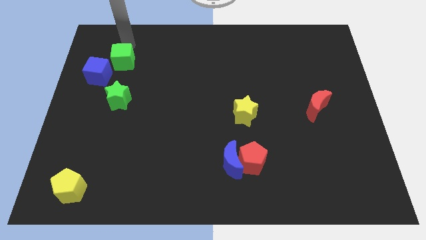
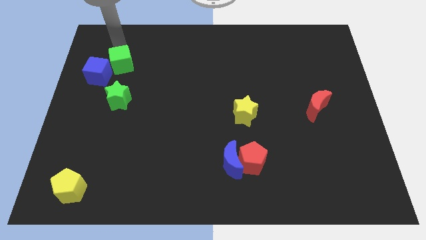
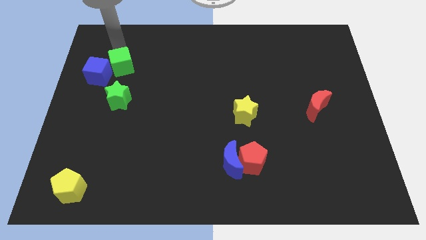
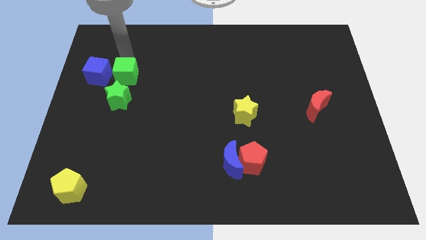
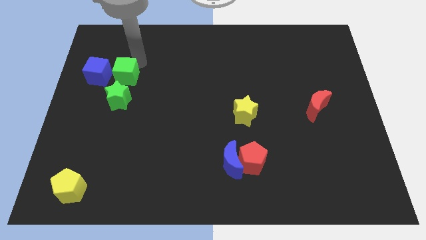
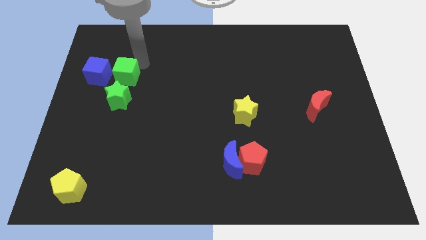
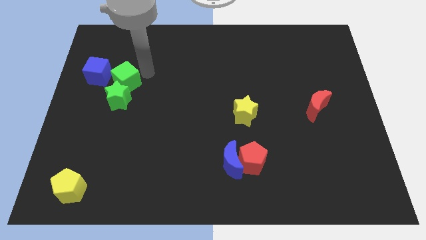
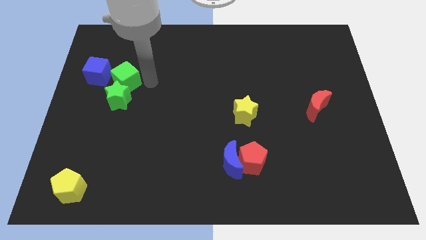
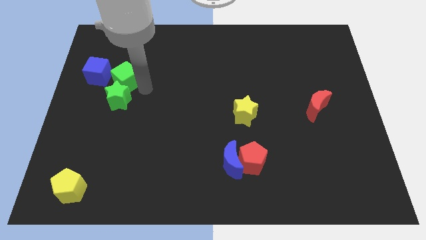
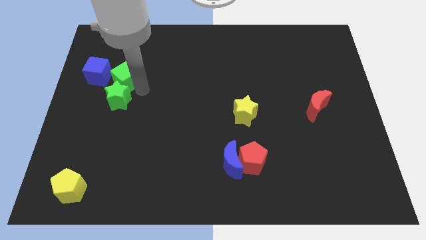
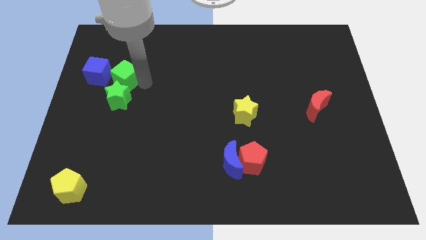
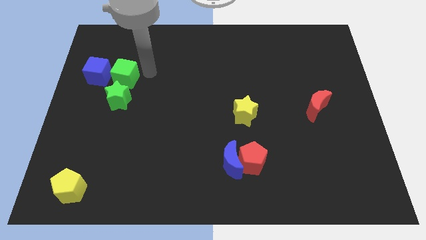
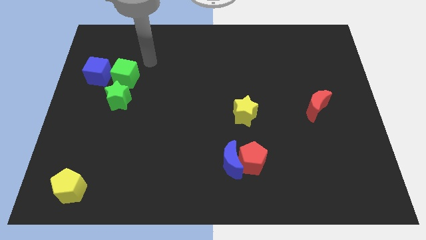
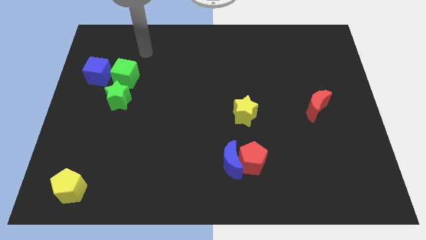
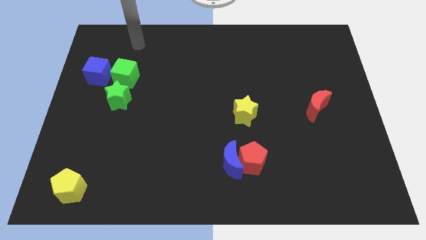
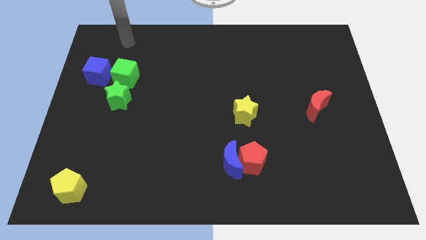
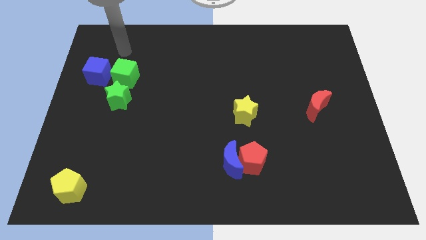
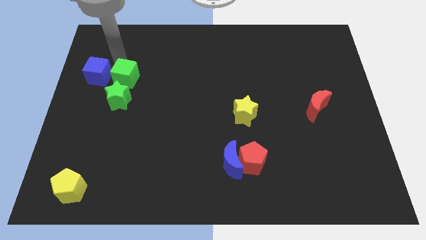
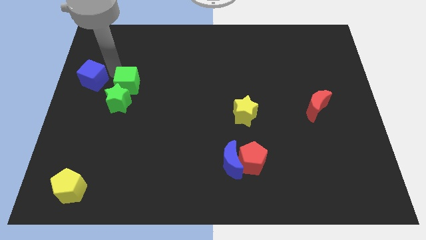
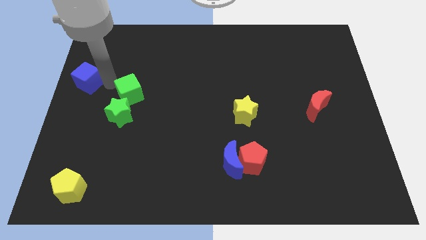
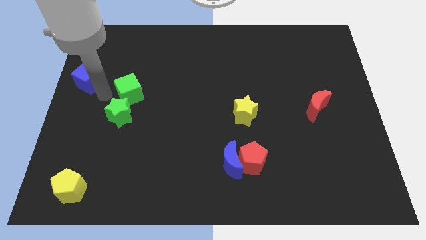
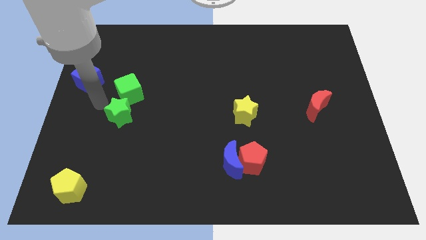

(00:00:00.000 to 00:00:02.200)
push the green cube towards the top of the green star vertically

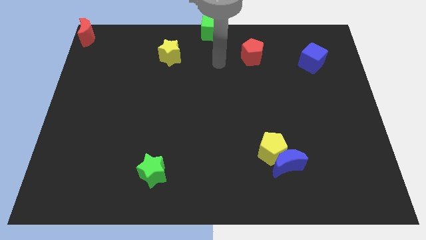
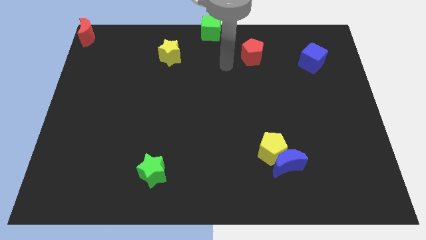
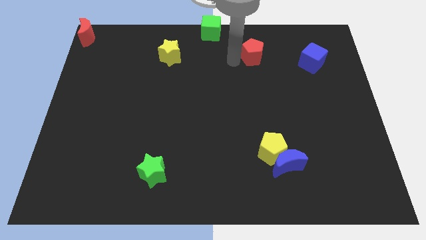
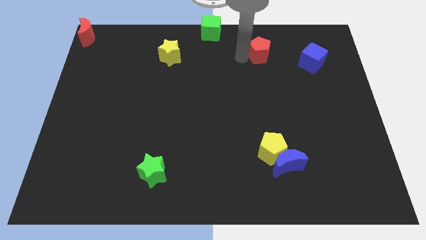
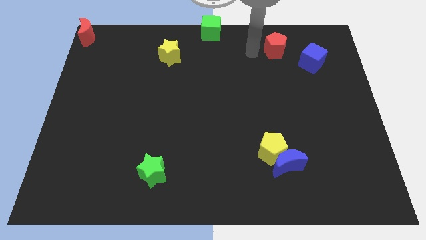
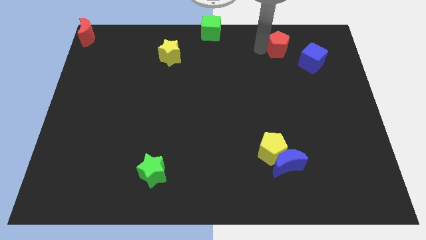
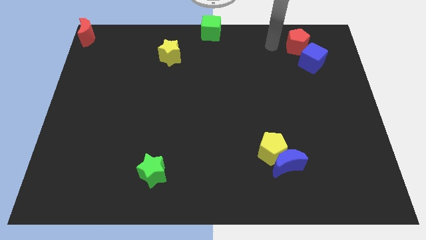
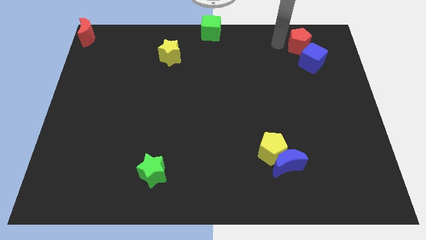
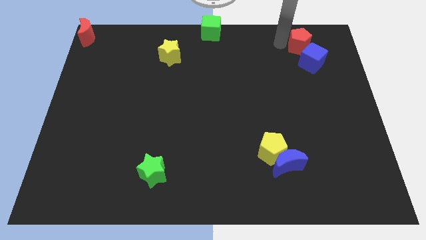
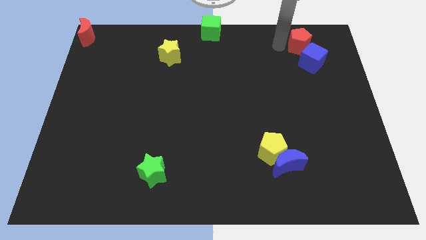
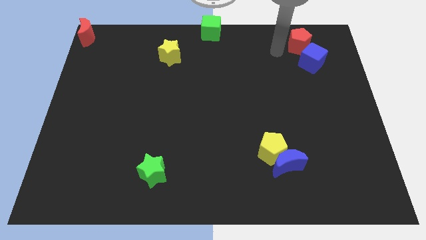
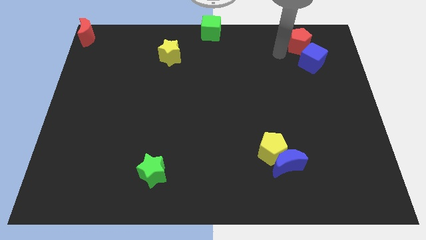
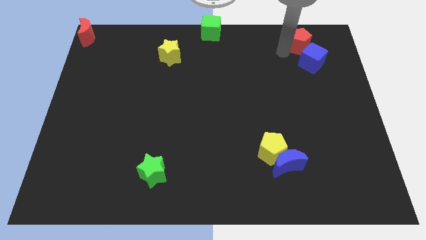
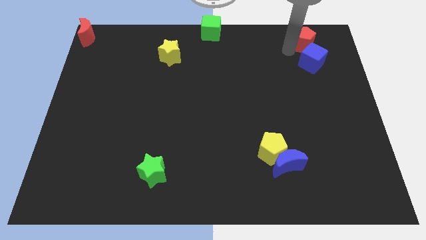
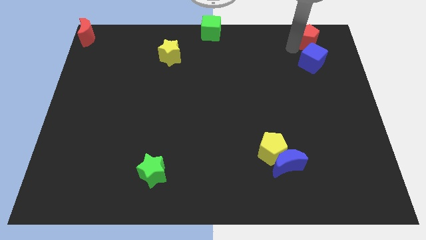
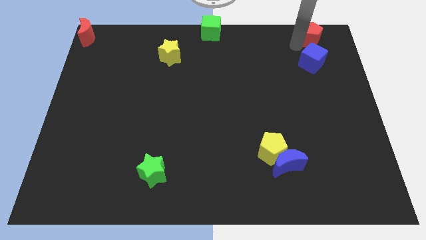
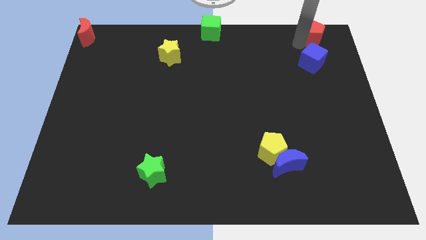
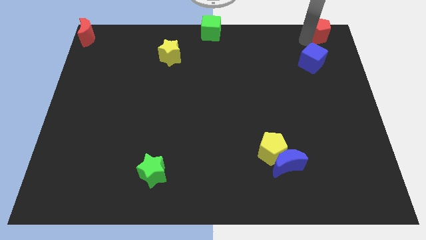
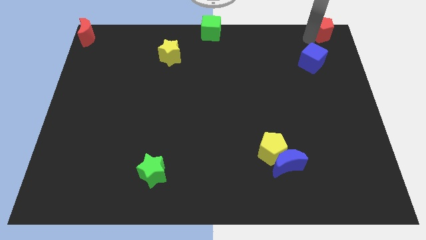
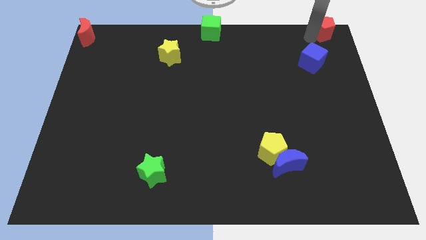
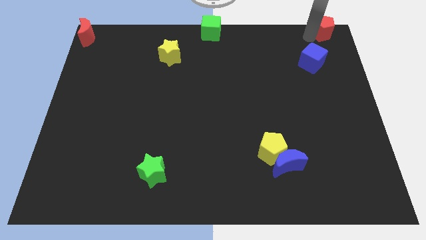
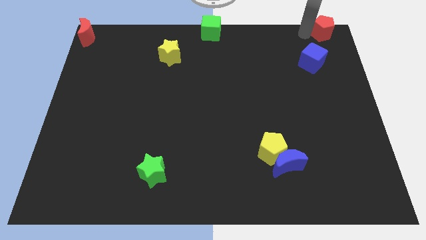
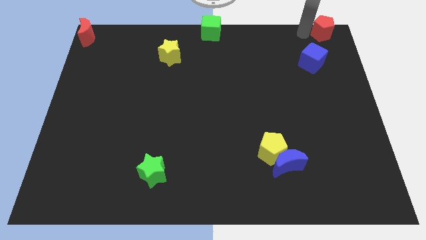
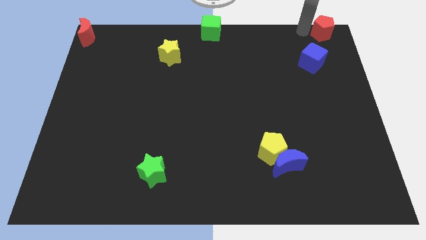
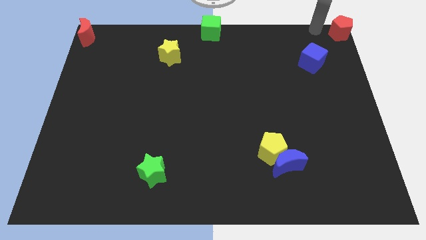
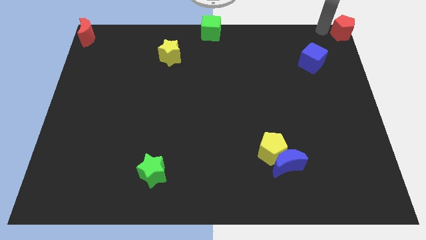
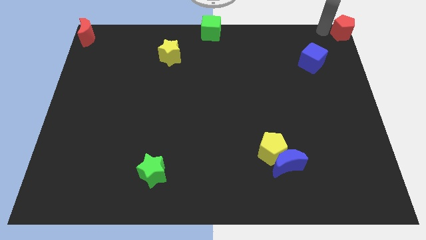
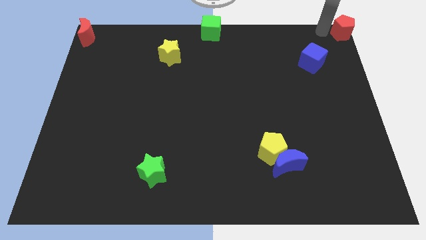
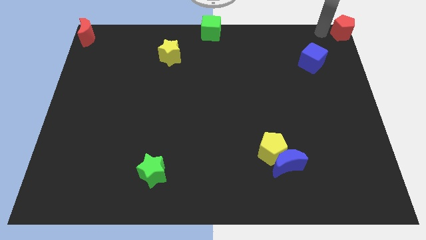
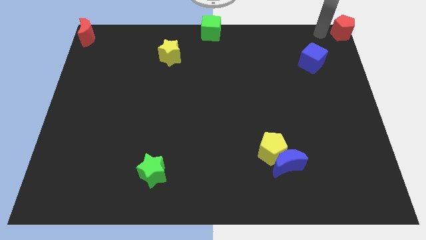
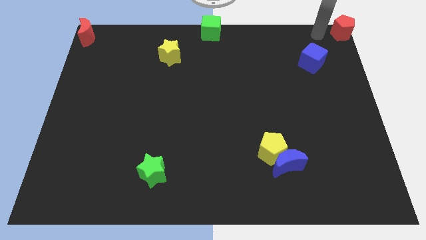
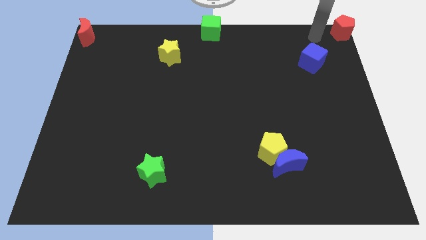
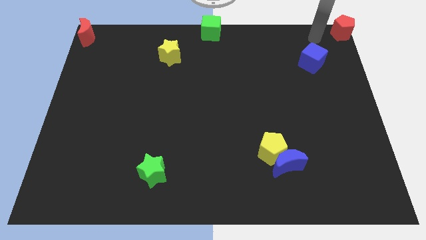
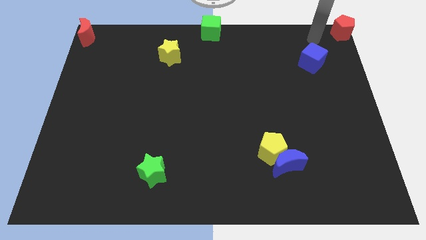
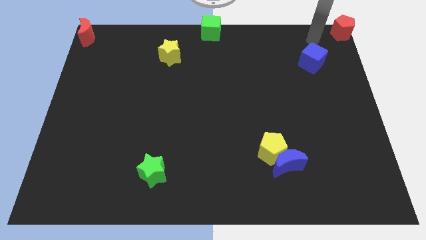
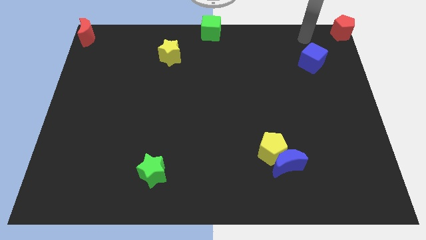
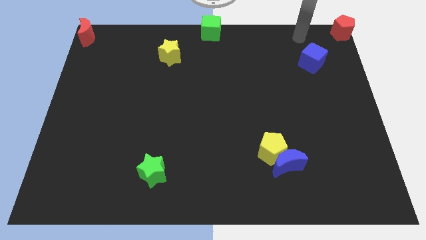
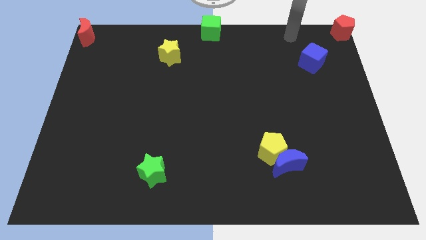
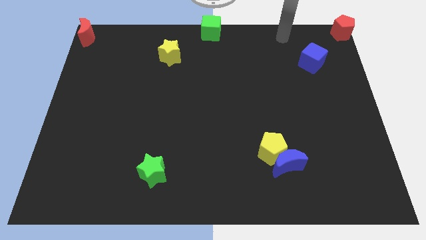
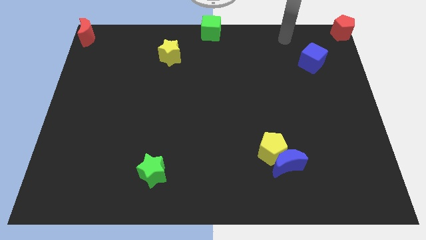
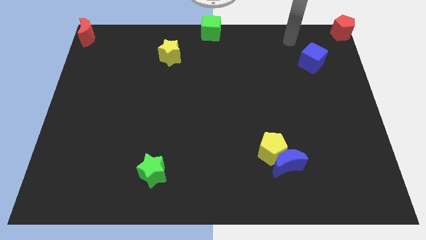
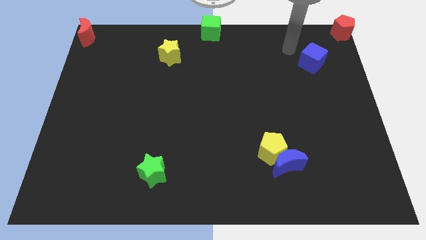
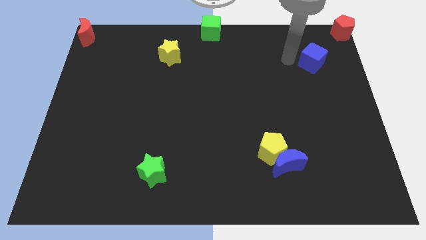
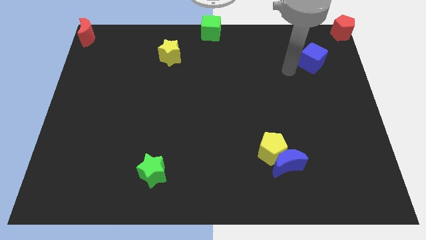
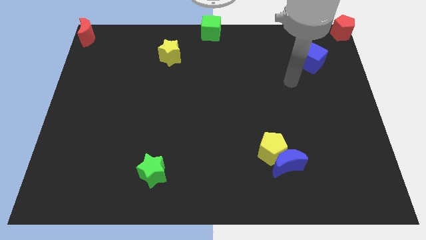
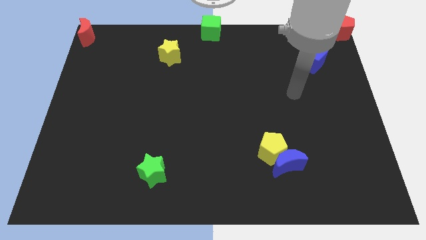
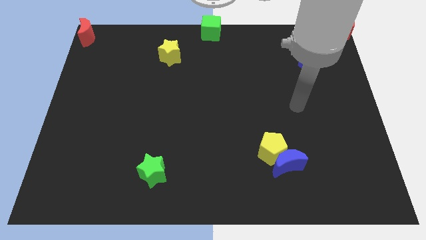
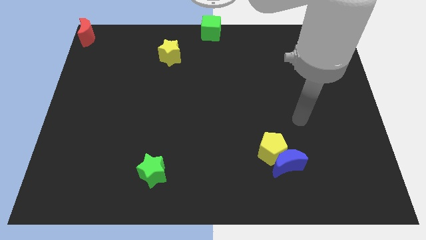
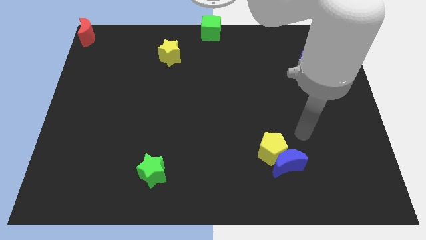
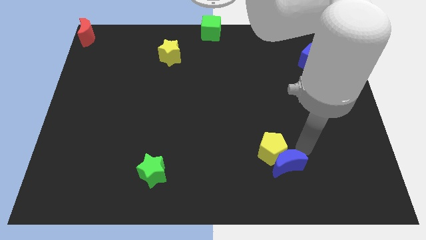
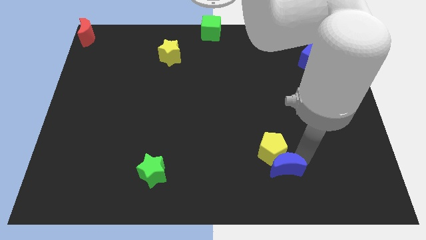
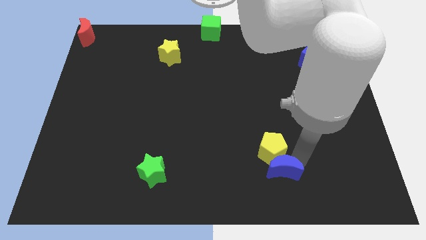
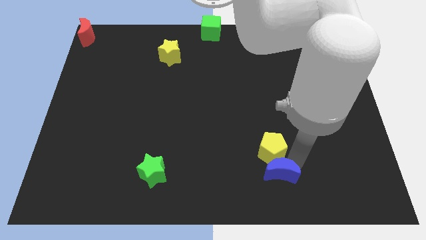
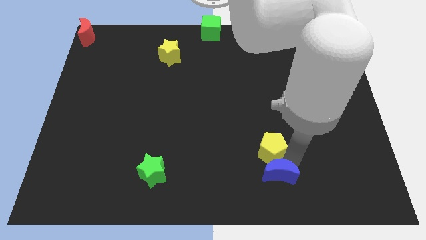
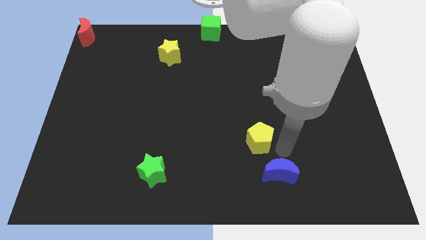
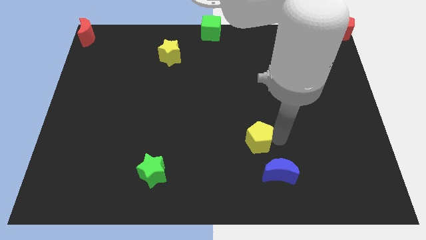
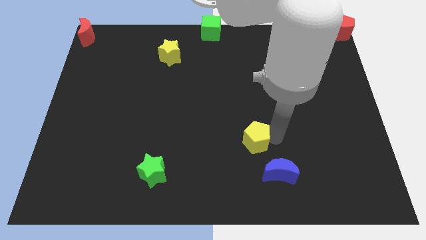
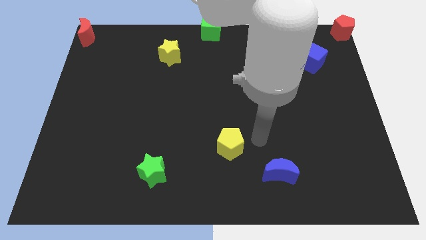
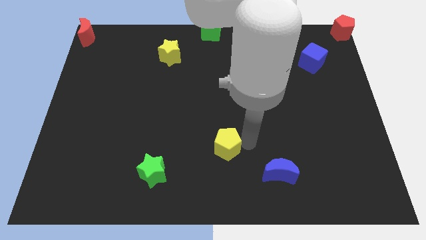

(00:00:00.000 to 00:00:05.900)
slide the red pentagon to top right corner of the board

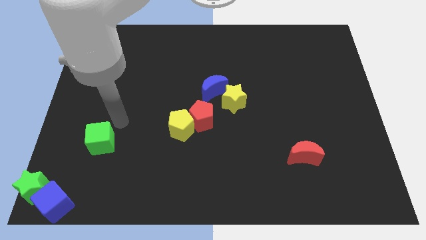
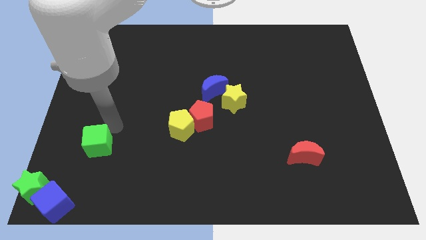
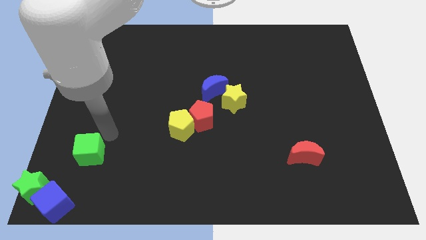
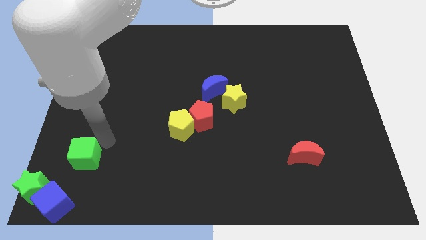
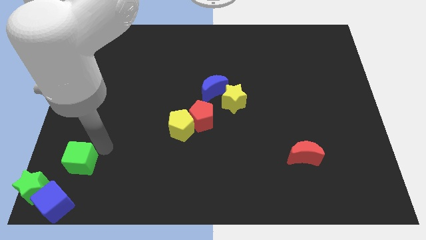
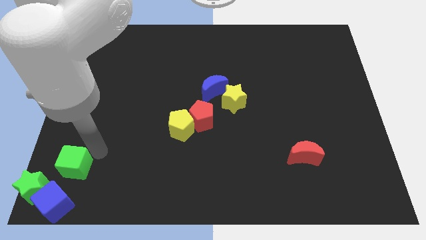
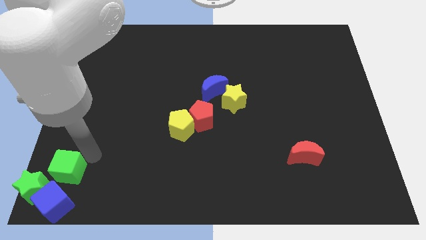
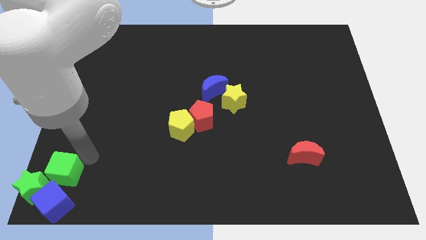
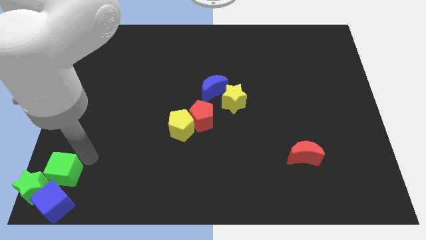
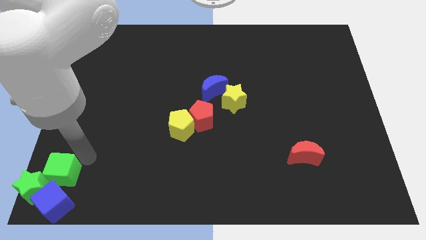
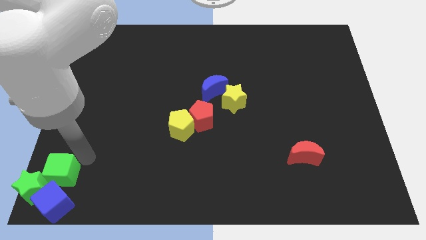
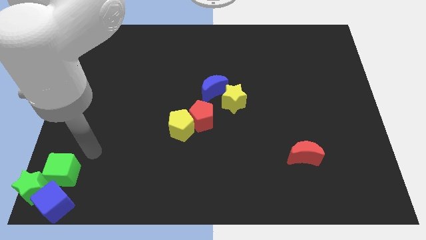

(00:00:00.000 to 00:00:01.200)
move the green cube close to the green star
